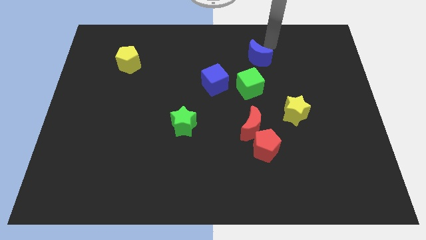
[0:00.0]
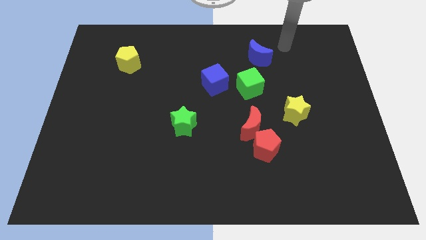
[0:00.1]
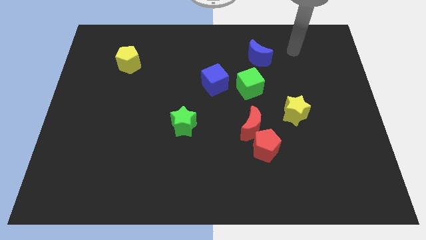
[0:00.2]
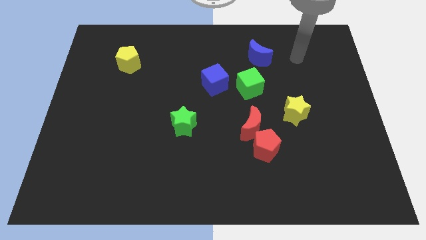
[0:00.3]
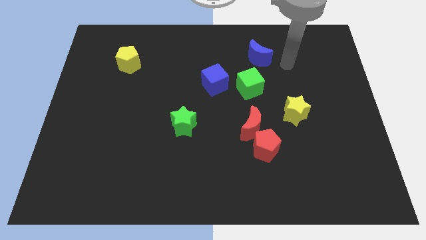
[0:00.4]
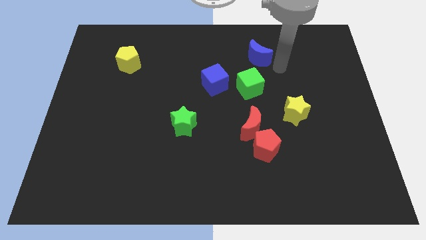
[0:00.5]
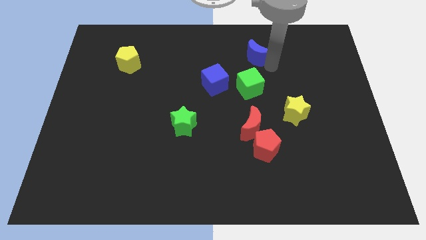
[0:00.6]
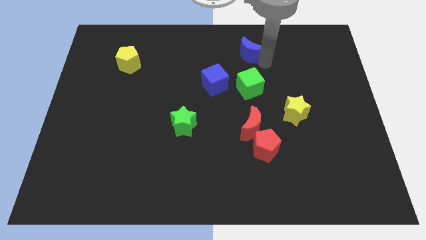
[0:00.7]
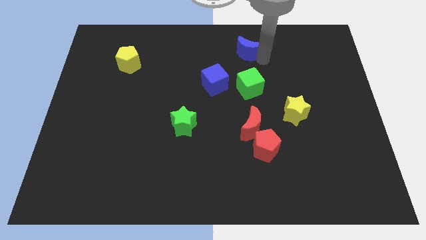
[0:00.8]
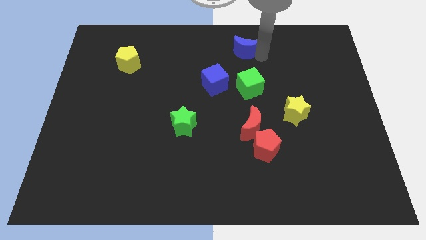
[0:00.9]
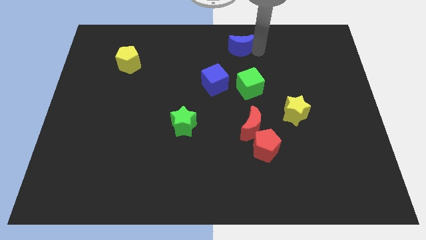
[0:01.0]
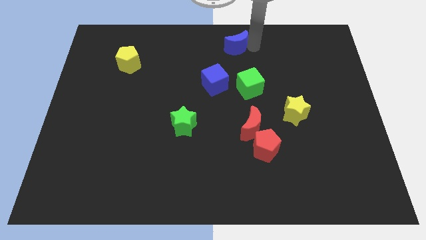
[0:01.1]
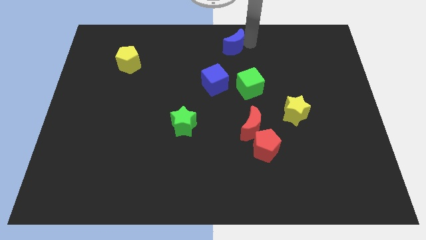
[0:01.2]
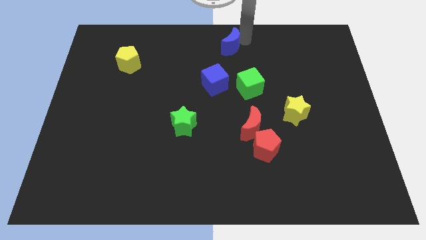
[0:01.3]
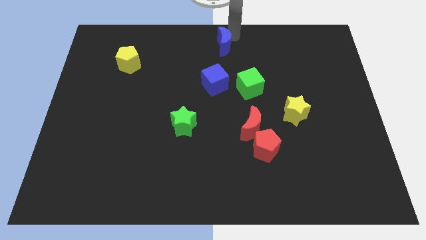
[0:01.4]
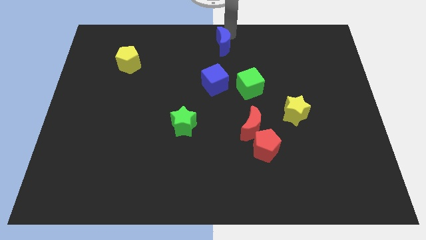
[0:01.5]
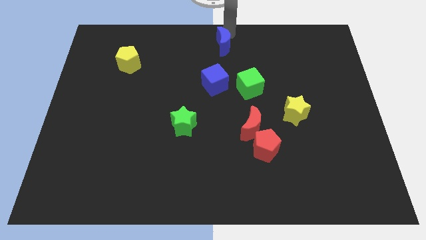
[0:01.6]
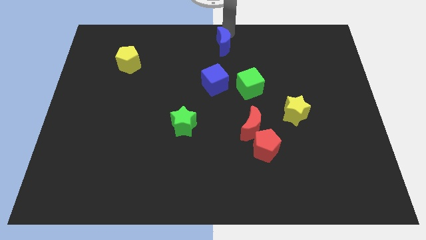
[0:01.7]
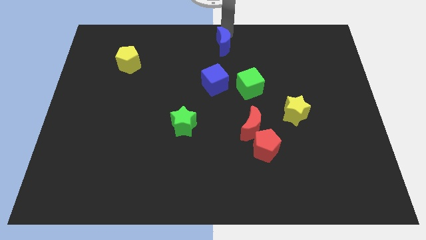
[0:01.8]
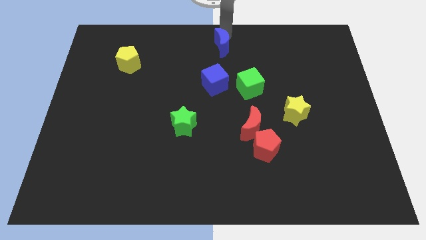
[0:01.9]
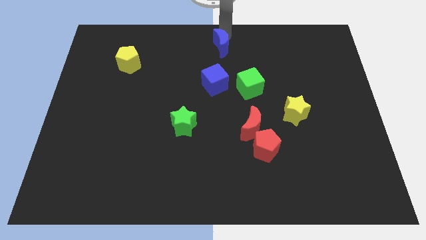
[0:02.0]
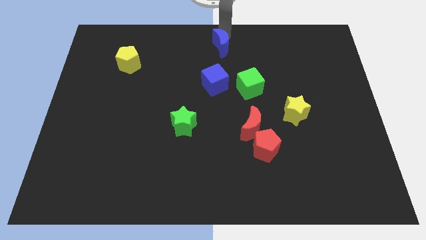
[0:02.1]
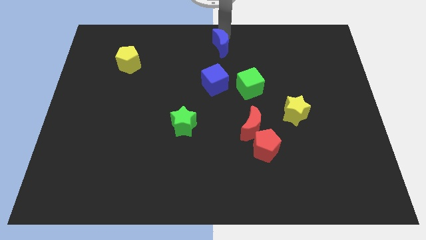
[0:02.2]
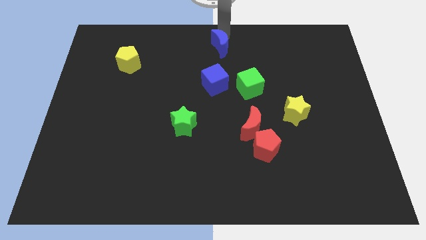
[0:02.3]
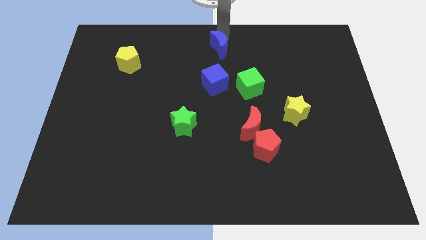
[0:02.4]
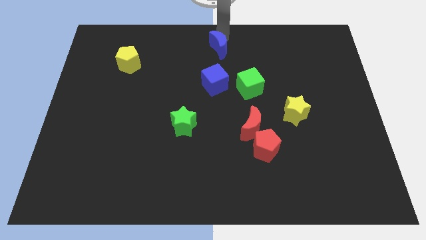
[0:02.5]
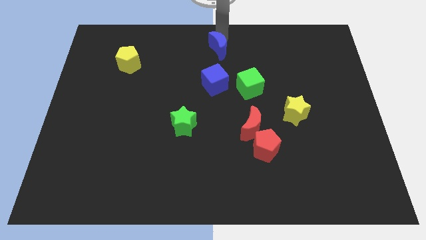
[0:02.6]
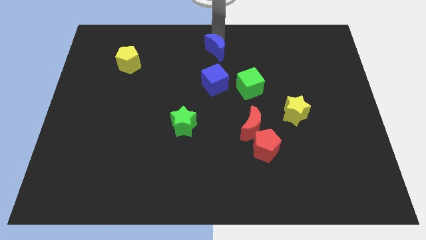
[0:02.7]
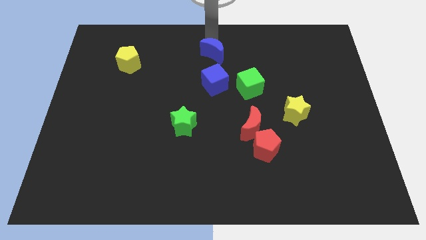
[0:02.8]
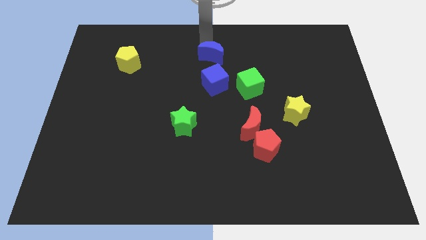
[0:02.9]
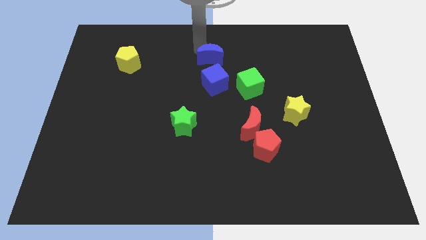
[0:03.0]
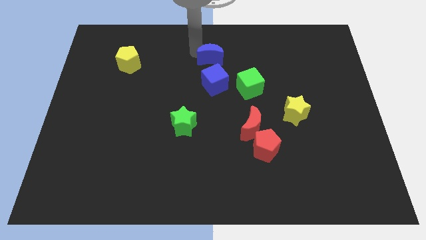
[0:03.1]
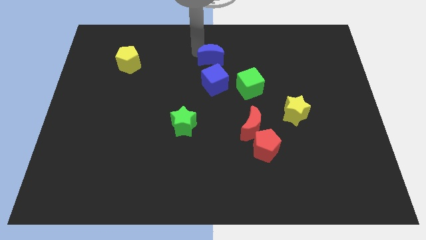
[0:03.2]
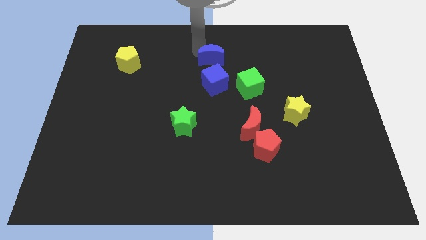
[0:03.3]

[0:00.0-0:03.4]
place the blue moon above the blue cube

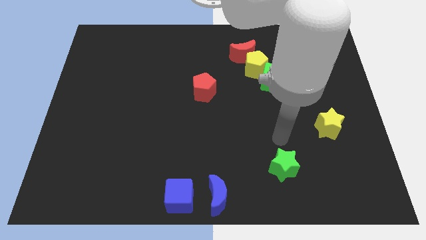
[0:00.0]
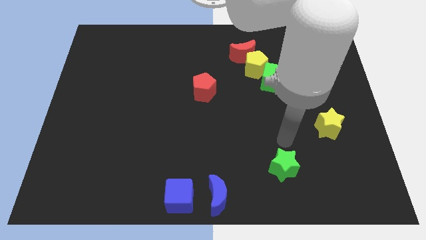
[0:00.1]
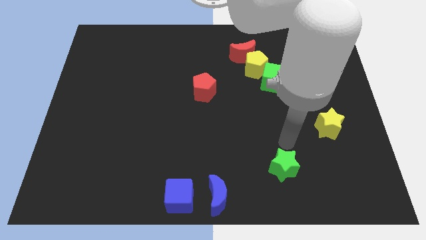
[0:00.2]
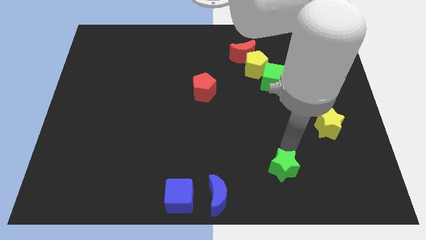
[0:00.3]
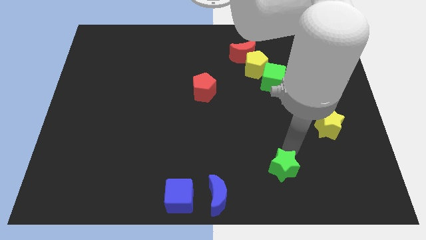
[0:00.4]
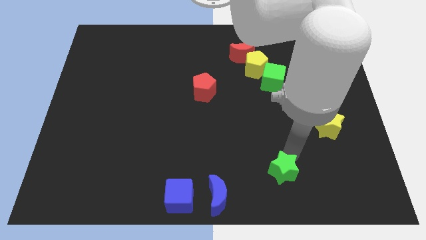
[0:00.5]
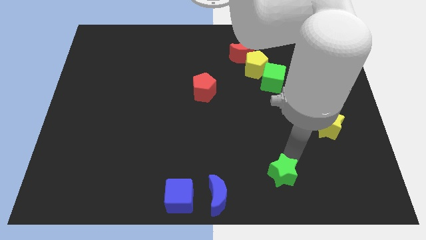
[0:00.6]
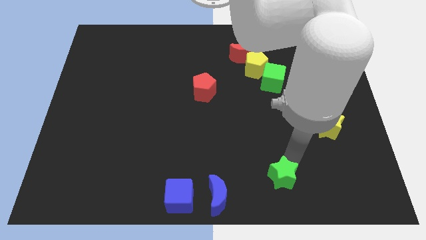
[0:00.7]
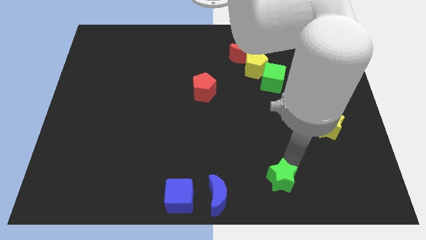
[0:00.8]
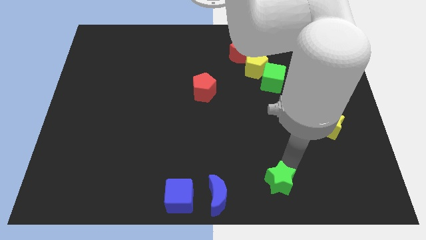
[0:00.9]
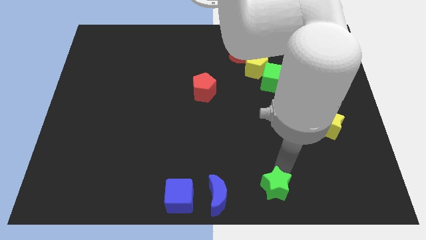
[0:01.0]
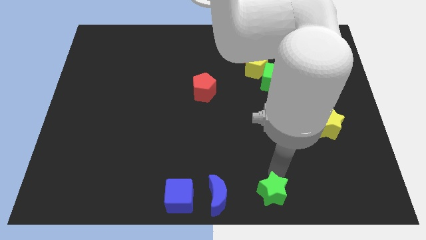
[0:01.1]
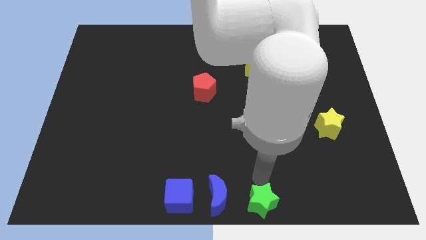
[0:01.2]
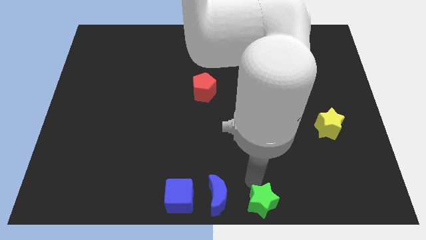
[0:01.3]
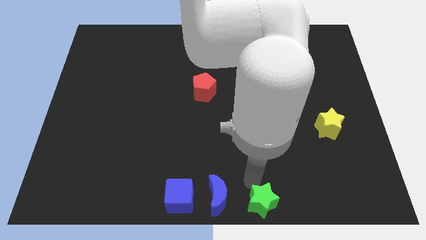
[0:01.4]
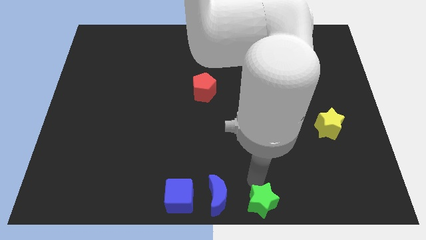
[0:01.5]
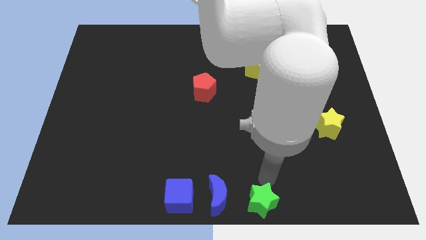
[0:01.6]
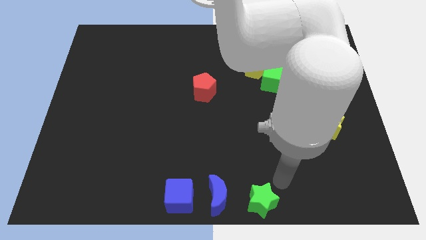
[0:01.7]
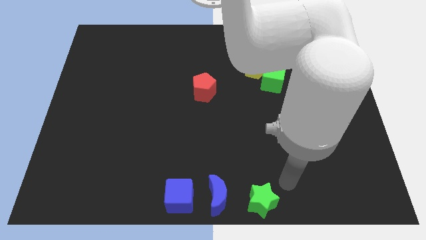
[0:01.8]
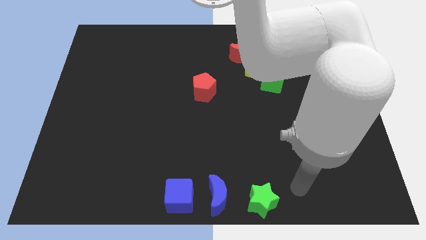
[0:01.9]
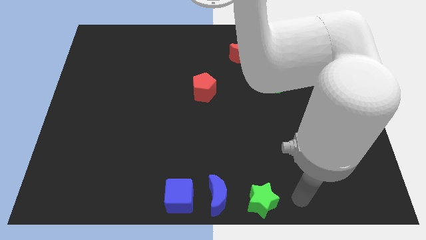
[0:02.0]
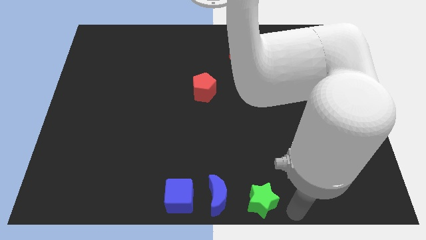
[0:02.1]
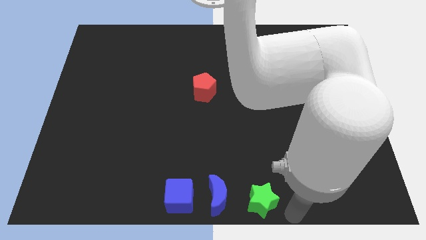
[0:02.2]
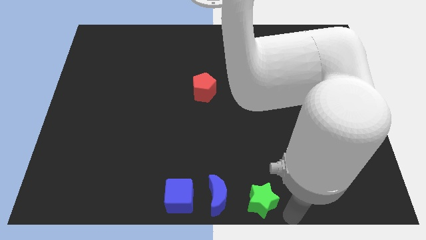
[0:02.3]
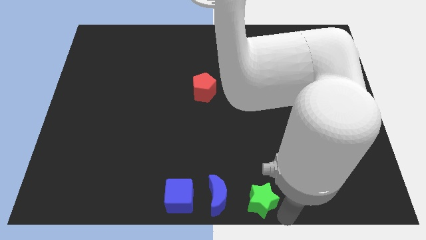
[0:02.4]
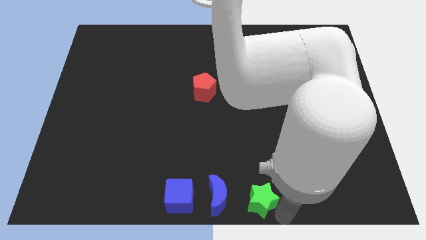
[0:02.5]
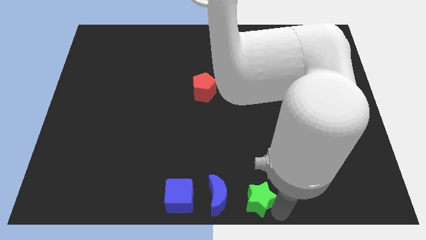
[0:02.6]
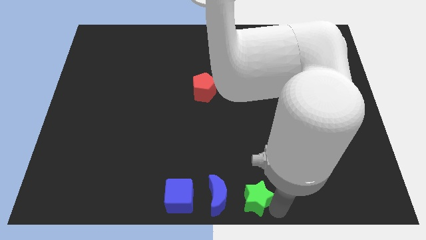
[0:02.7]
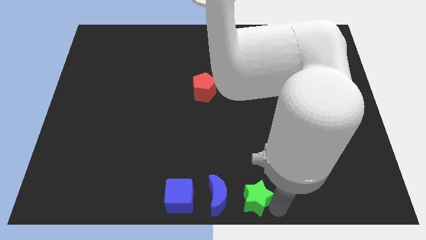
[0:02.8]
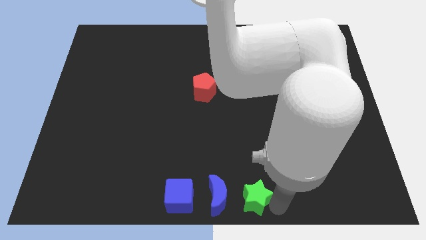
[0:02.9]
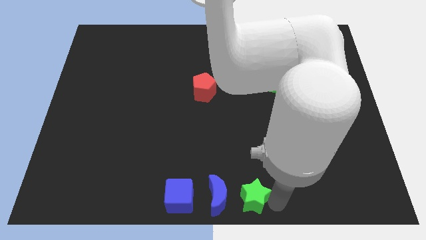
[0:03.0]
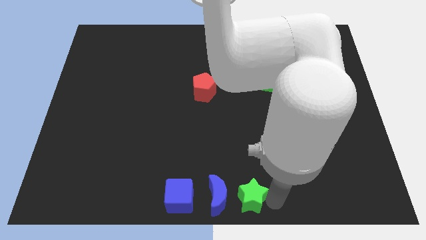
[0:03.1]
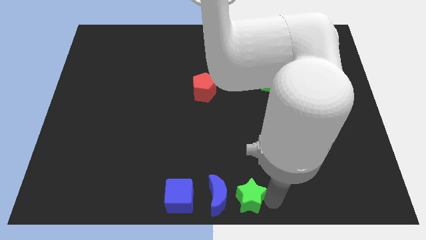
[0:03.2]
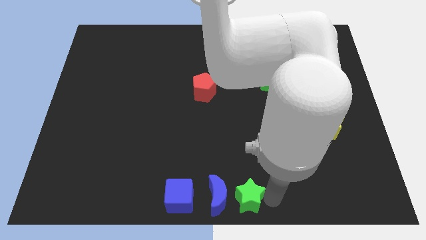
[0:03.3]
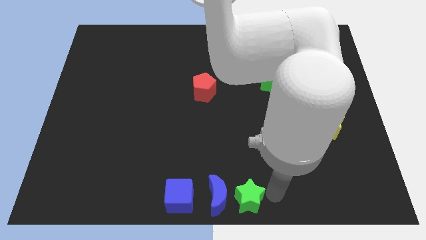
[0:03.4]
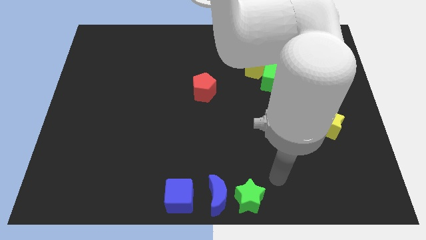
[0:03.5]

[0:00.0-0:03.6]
push the green star to the right of the blue moon

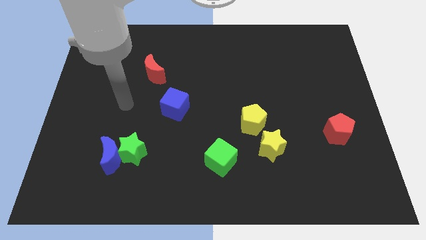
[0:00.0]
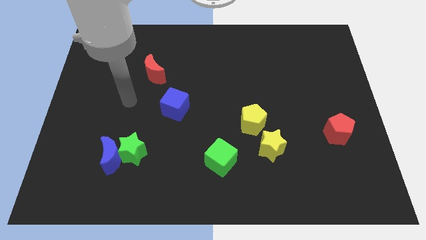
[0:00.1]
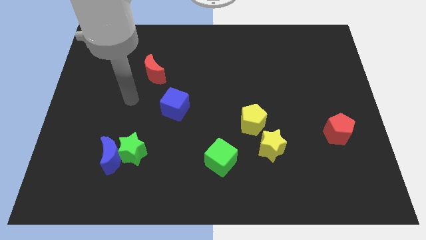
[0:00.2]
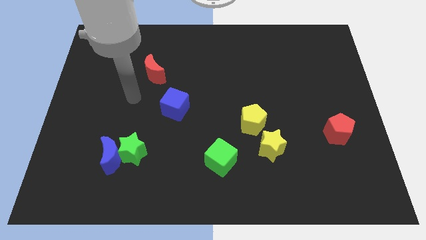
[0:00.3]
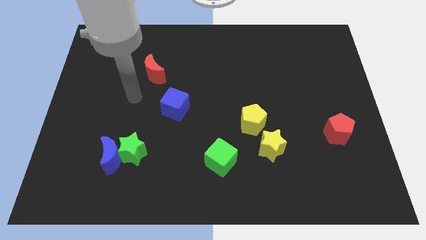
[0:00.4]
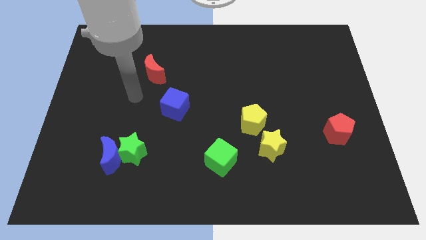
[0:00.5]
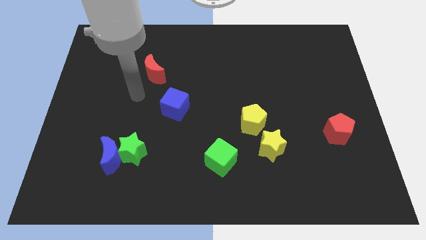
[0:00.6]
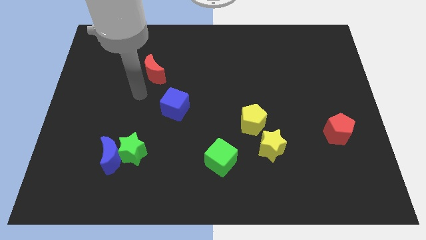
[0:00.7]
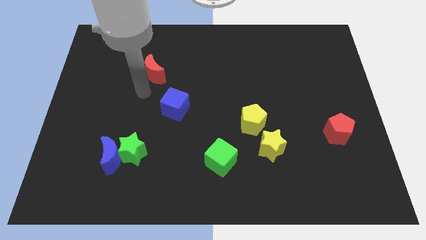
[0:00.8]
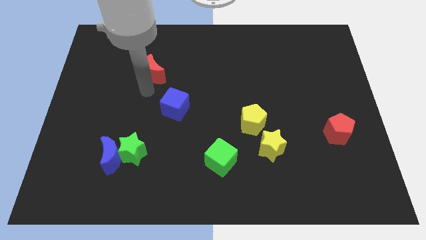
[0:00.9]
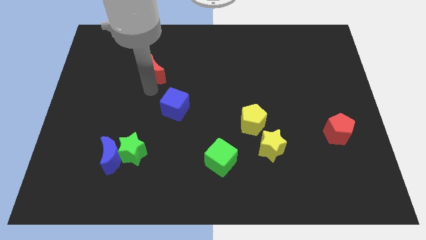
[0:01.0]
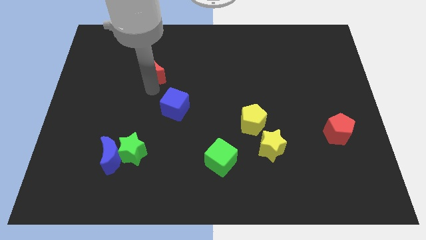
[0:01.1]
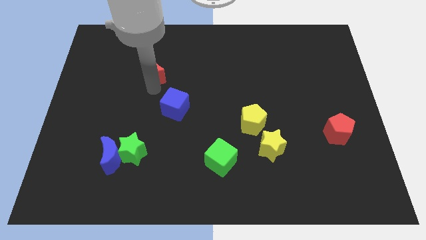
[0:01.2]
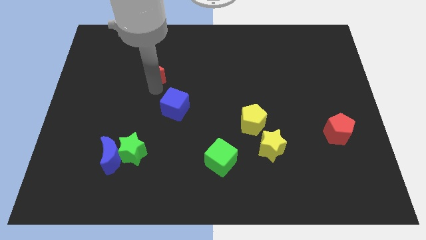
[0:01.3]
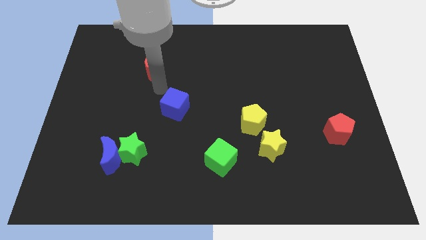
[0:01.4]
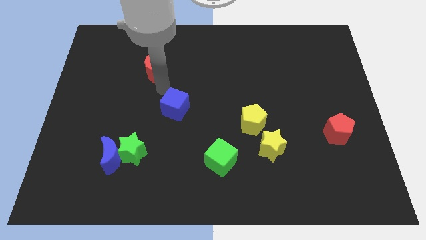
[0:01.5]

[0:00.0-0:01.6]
move the arm to the bottom of the red crescent

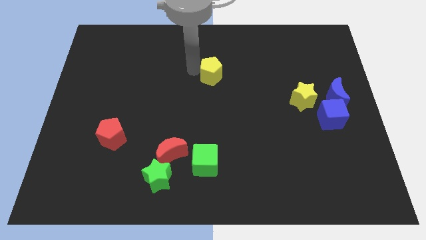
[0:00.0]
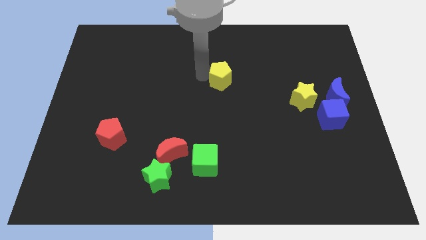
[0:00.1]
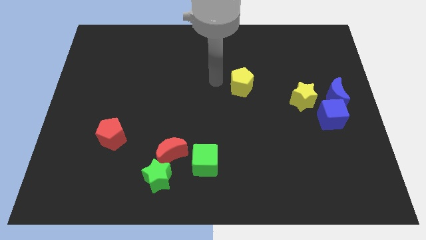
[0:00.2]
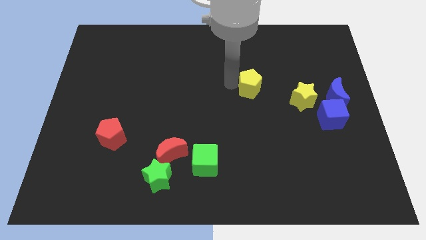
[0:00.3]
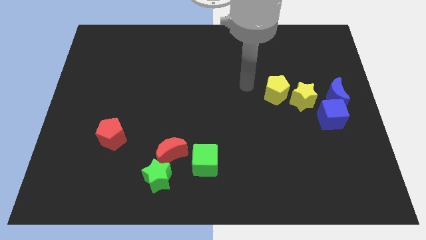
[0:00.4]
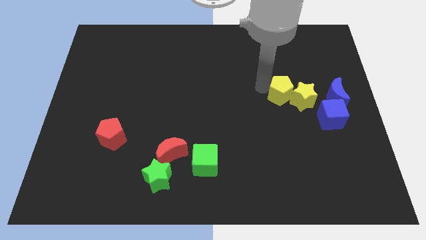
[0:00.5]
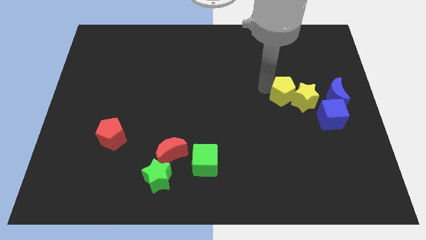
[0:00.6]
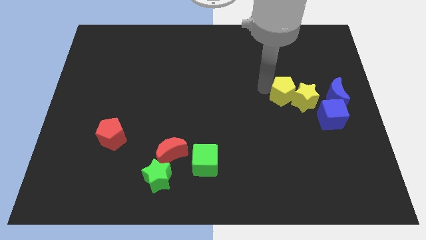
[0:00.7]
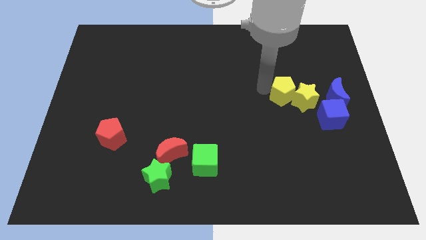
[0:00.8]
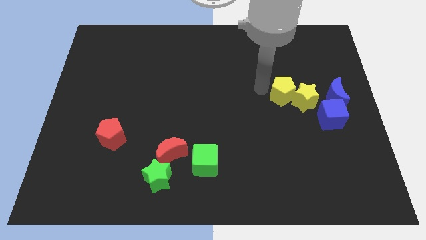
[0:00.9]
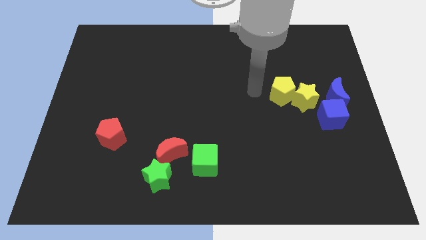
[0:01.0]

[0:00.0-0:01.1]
push the yellow pentagon into the yellow star
